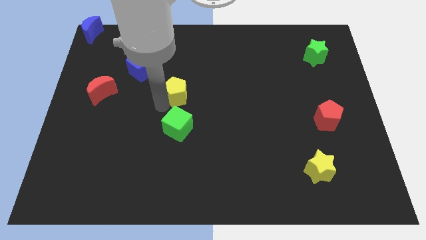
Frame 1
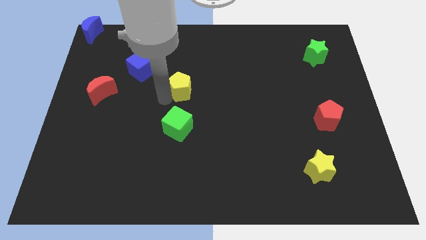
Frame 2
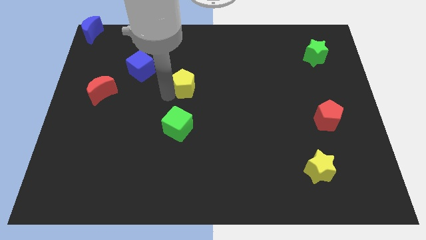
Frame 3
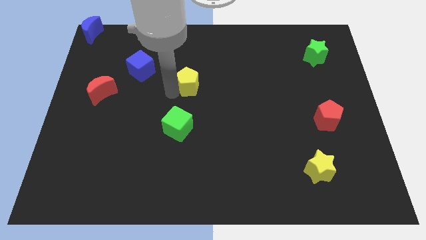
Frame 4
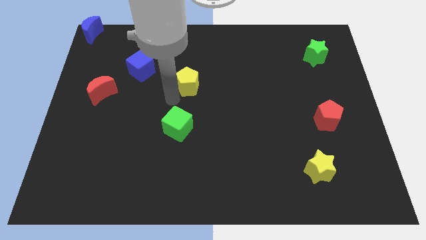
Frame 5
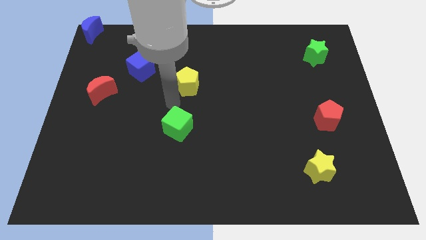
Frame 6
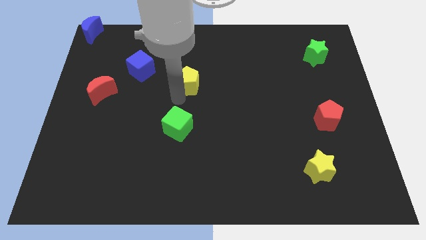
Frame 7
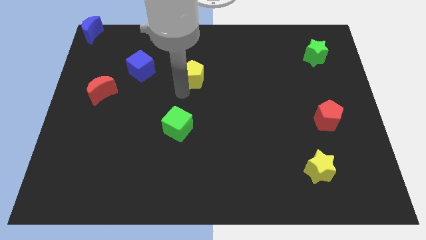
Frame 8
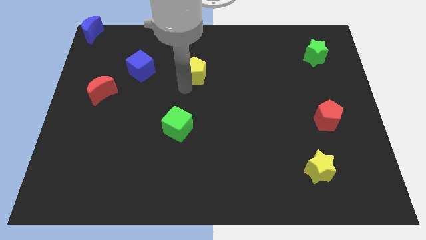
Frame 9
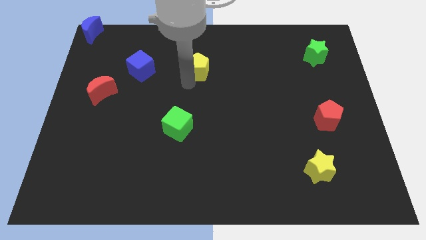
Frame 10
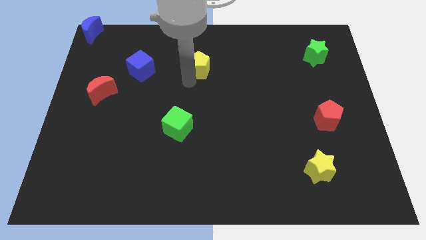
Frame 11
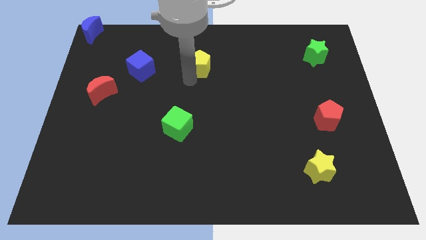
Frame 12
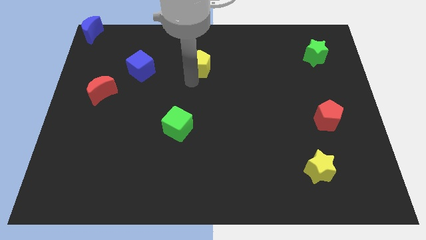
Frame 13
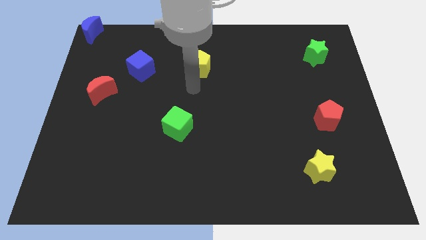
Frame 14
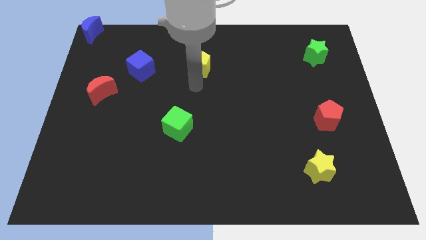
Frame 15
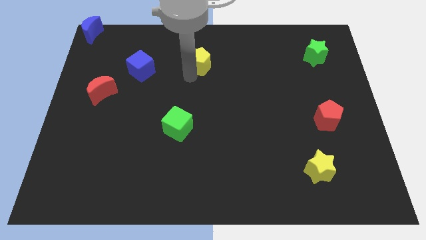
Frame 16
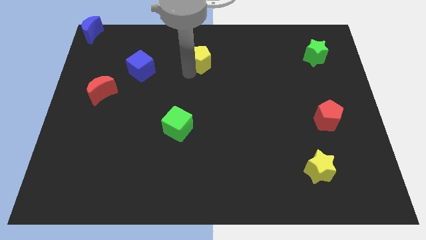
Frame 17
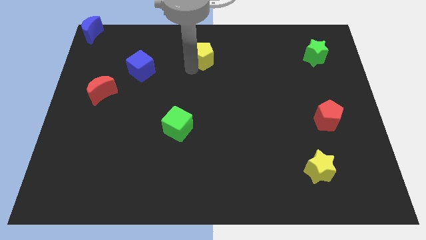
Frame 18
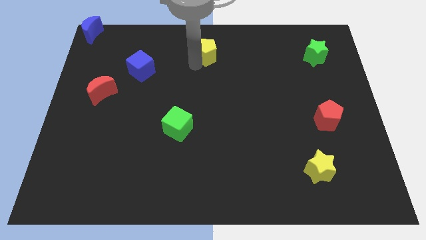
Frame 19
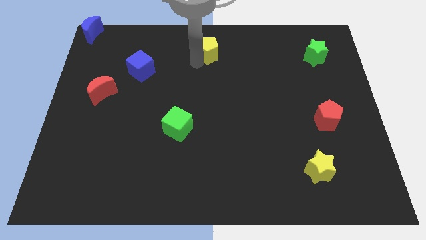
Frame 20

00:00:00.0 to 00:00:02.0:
slide the yellow pentagon towards the top center of the table

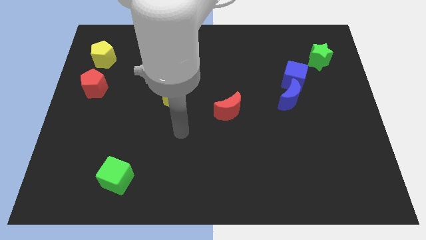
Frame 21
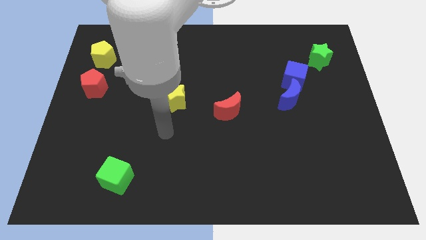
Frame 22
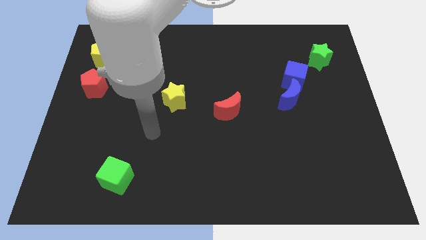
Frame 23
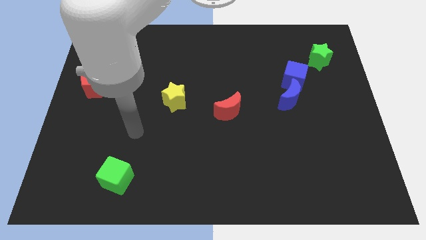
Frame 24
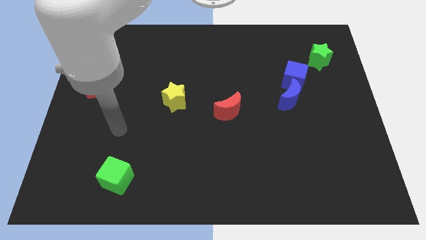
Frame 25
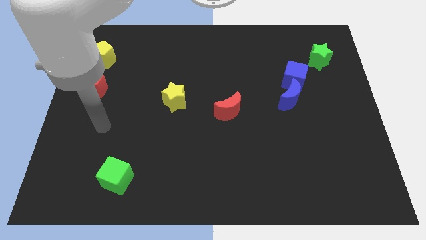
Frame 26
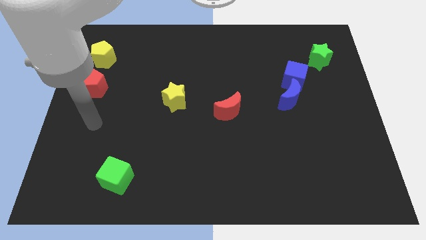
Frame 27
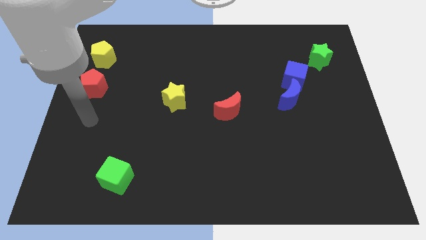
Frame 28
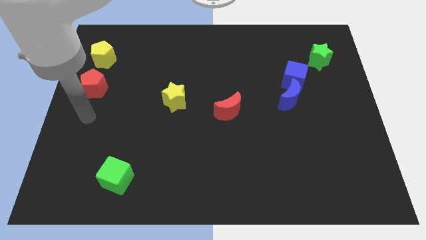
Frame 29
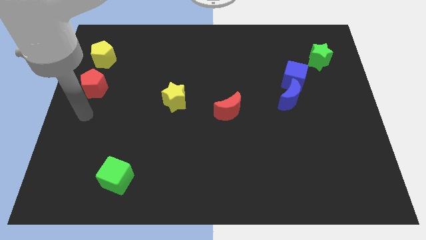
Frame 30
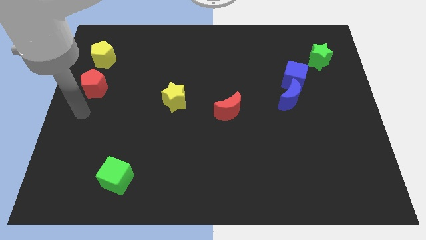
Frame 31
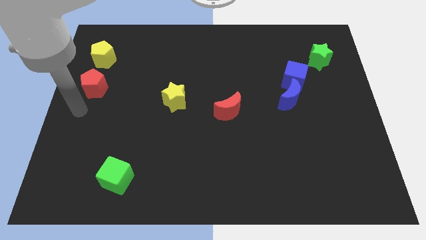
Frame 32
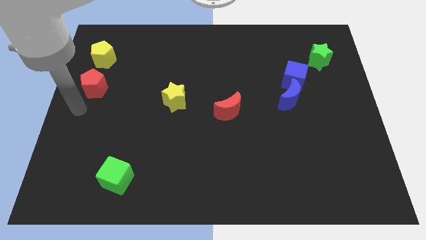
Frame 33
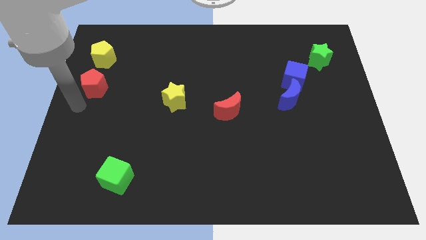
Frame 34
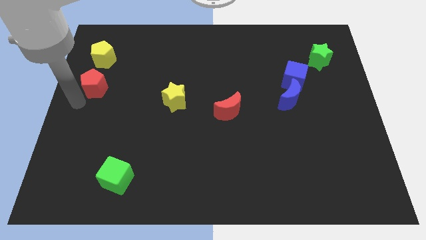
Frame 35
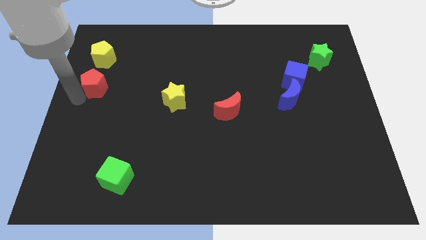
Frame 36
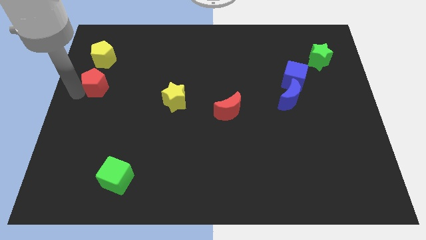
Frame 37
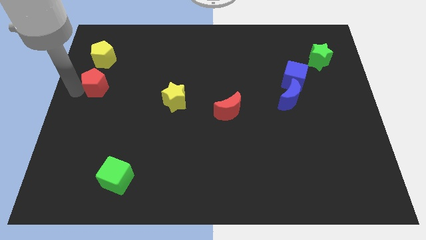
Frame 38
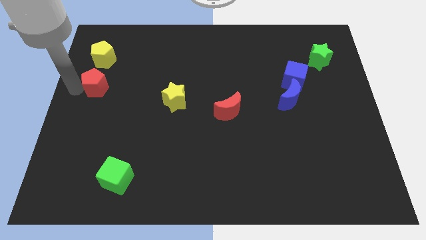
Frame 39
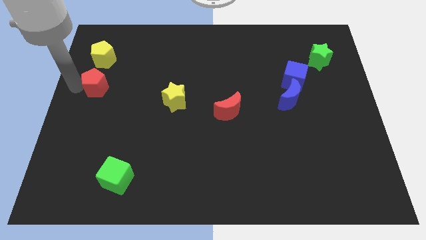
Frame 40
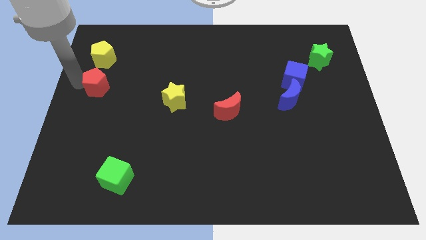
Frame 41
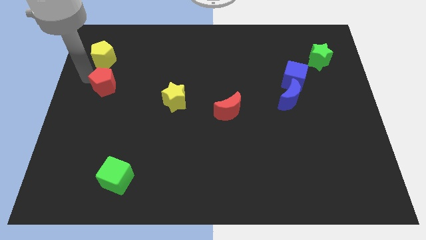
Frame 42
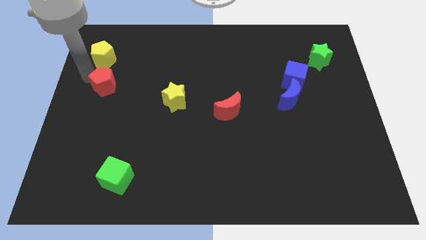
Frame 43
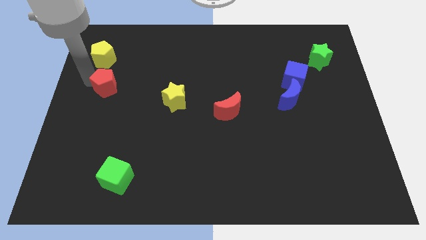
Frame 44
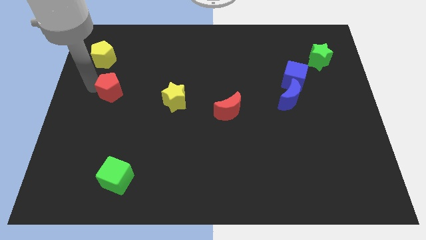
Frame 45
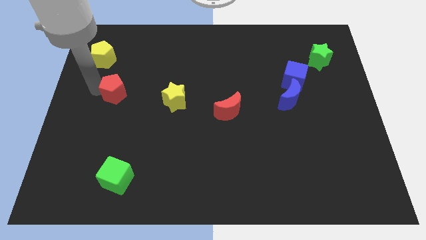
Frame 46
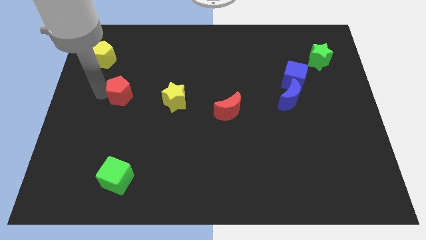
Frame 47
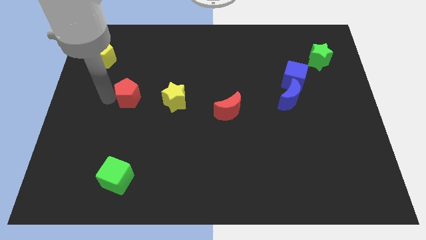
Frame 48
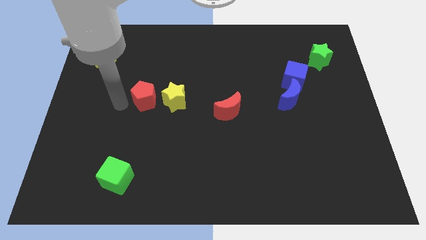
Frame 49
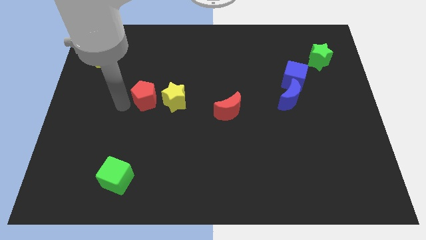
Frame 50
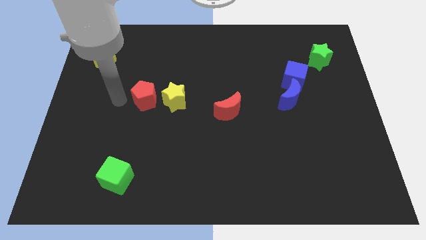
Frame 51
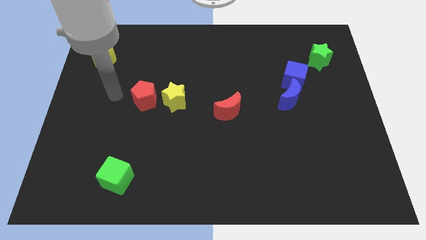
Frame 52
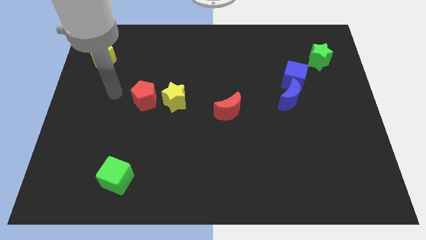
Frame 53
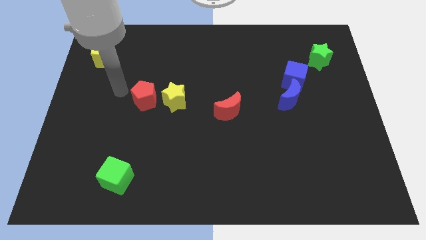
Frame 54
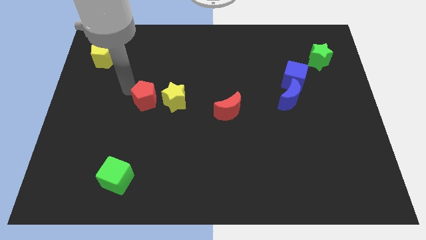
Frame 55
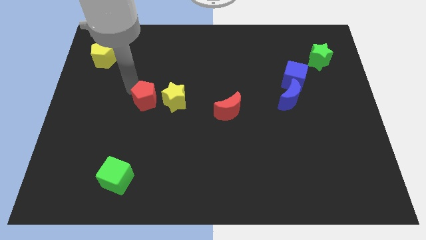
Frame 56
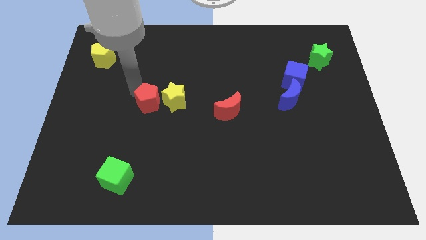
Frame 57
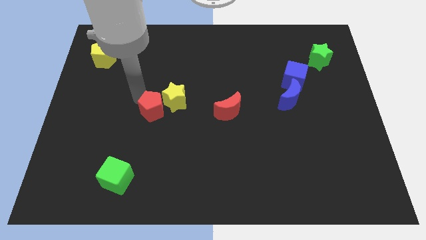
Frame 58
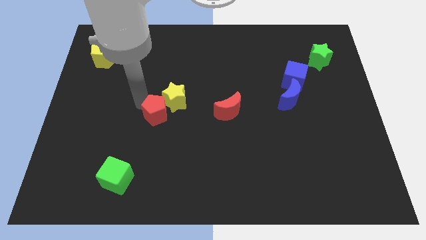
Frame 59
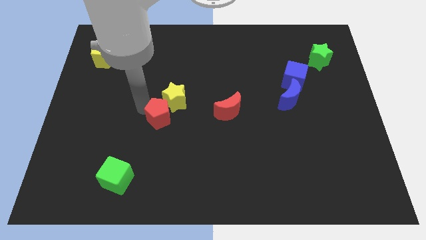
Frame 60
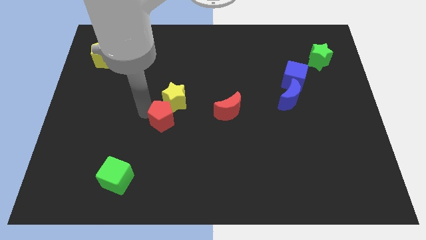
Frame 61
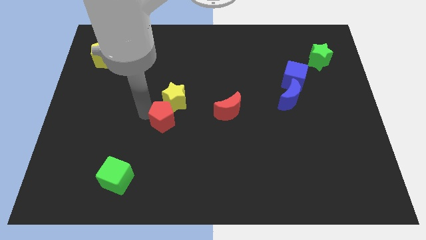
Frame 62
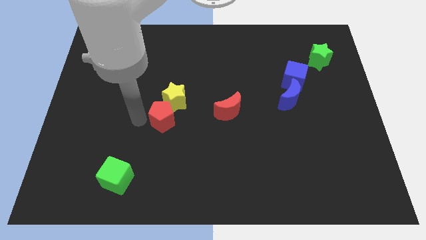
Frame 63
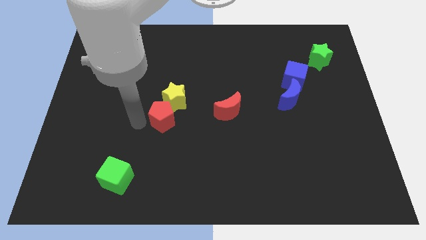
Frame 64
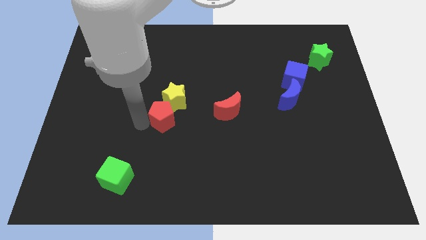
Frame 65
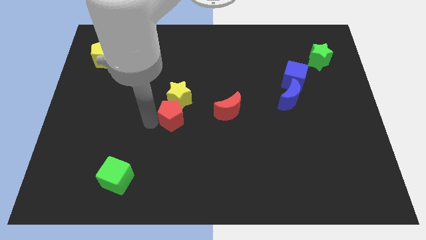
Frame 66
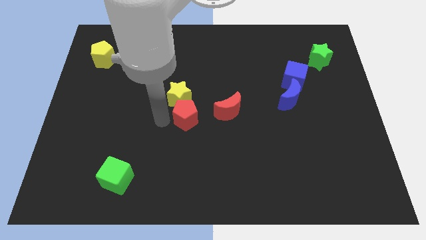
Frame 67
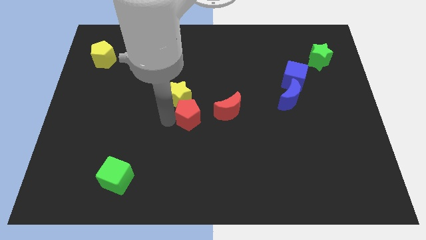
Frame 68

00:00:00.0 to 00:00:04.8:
place the red pentagon below the yellow star

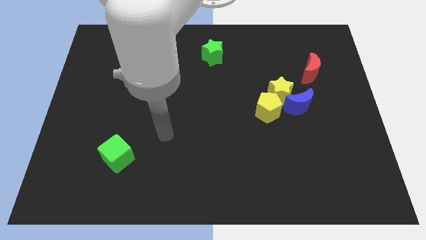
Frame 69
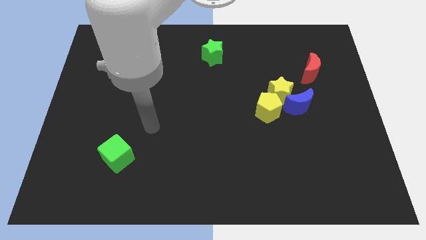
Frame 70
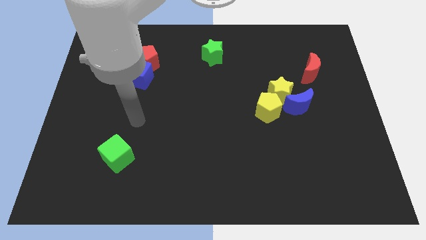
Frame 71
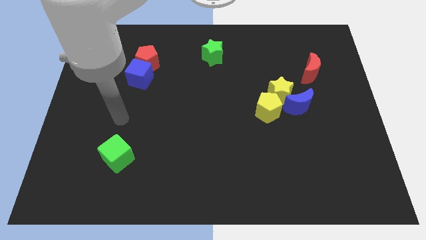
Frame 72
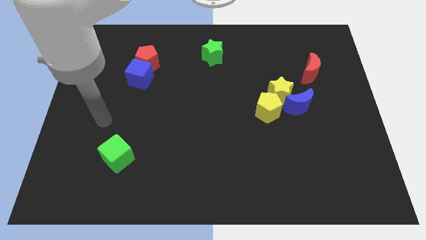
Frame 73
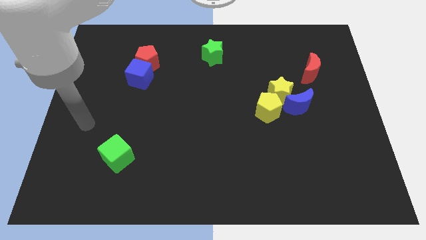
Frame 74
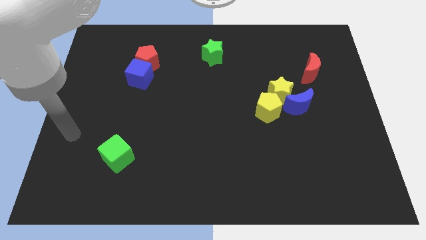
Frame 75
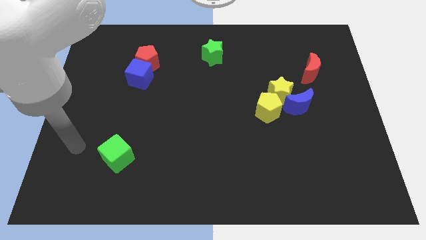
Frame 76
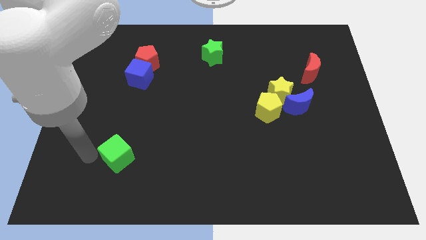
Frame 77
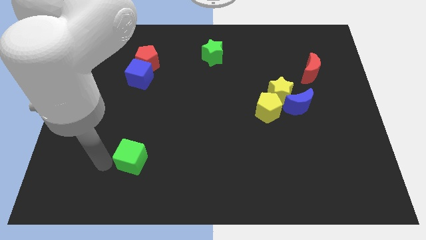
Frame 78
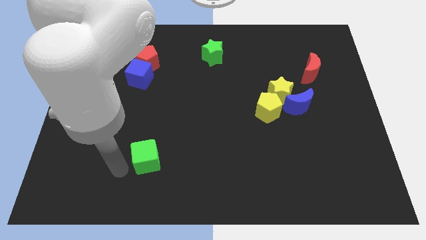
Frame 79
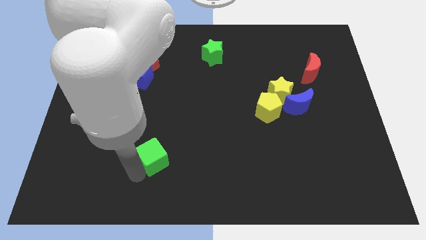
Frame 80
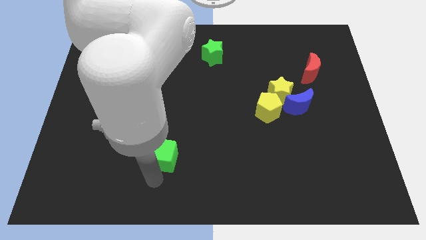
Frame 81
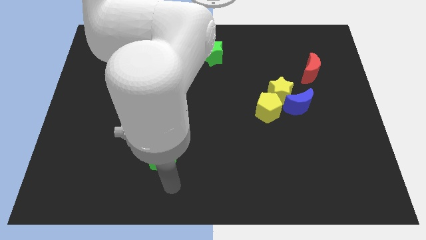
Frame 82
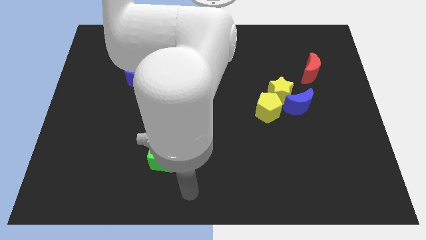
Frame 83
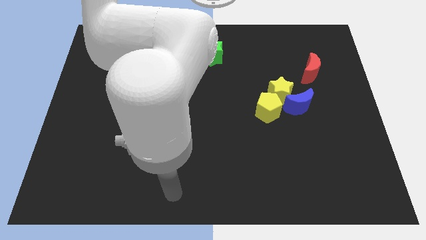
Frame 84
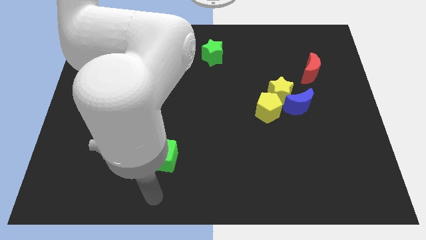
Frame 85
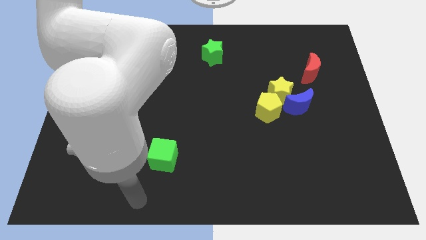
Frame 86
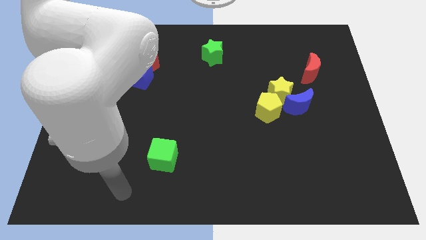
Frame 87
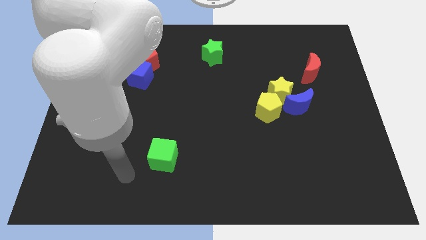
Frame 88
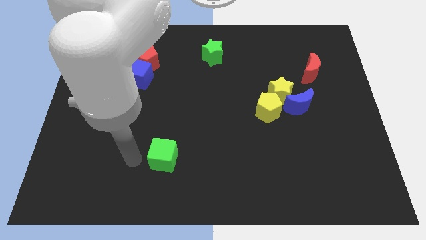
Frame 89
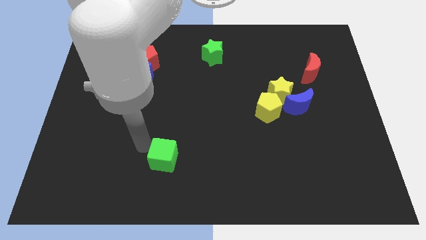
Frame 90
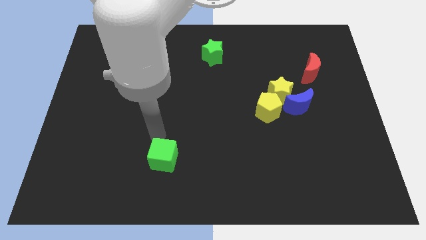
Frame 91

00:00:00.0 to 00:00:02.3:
move green cube towards bottom center
